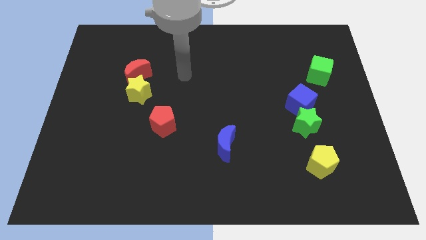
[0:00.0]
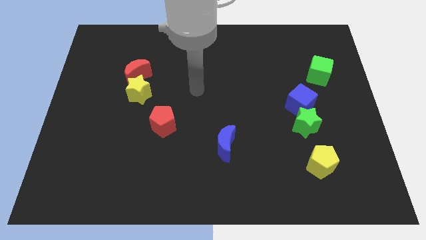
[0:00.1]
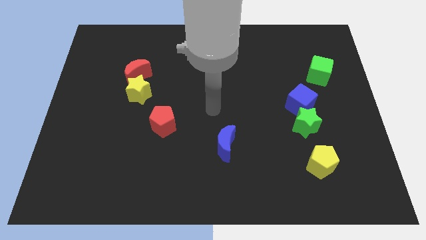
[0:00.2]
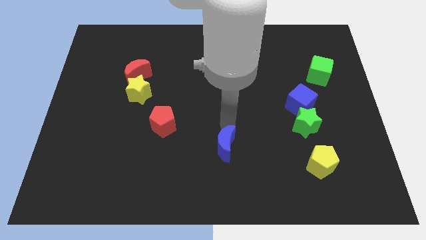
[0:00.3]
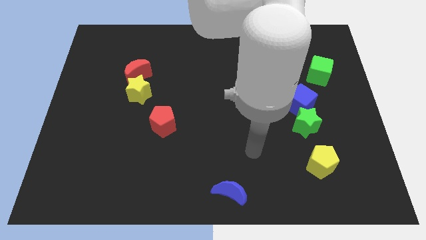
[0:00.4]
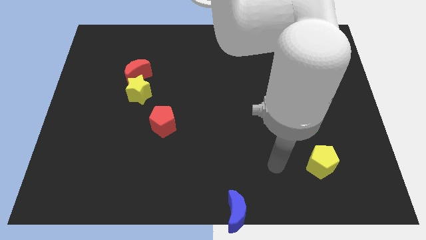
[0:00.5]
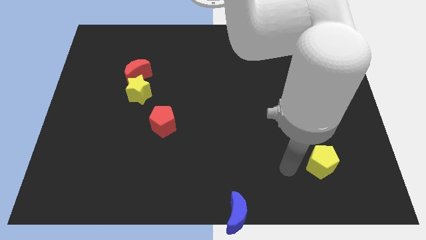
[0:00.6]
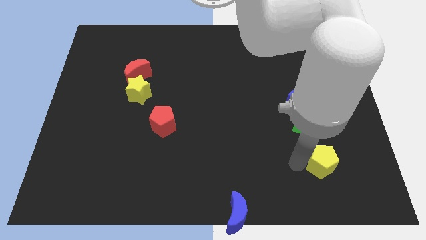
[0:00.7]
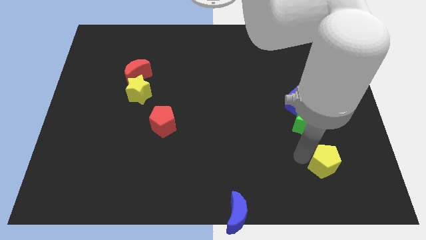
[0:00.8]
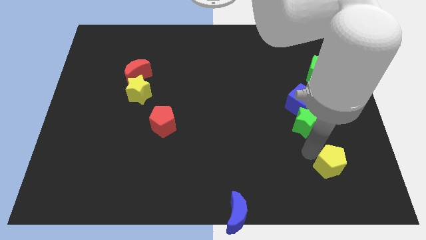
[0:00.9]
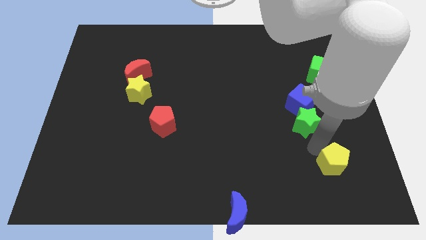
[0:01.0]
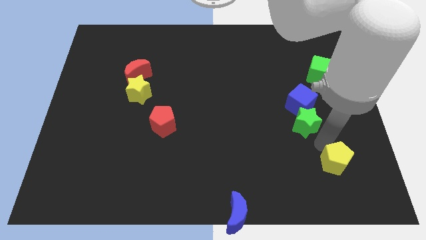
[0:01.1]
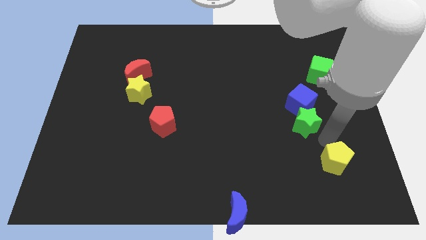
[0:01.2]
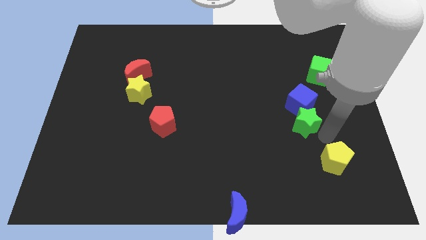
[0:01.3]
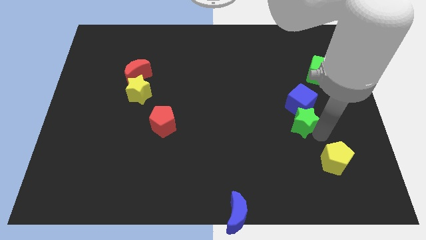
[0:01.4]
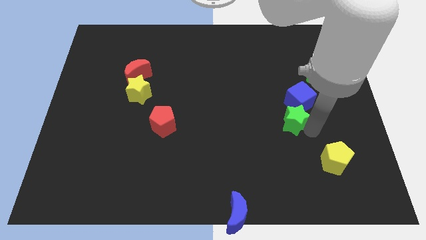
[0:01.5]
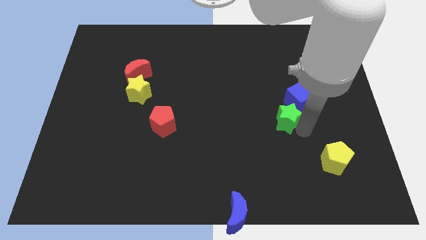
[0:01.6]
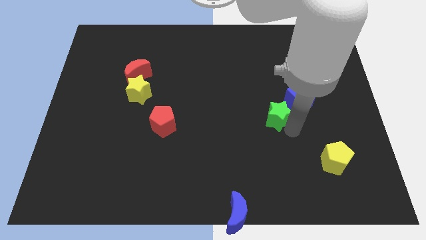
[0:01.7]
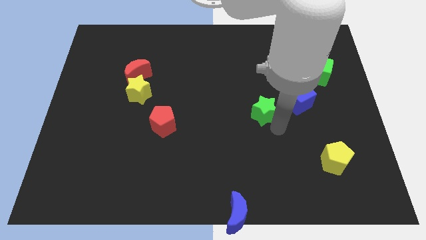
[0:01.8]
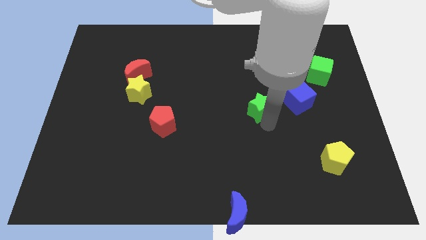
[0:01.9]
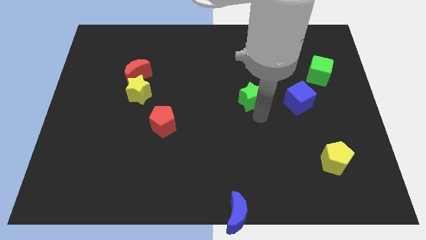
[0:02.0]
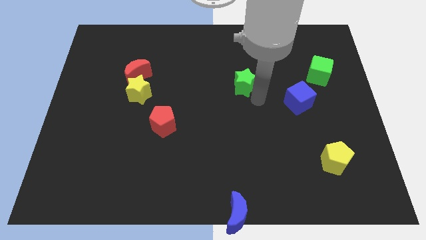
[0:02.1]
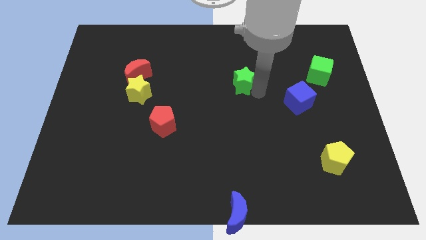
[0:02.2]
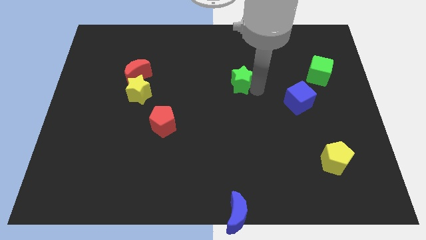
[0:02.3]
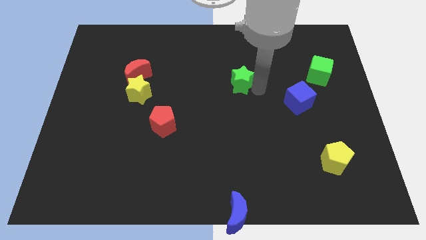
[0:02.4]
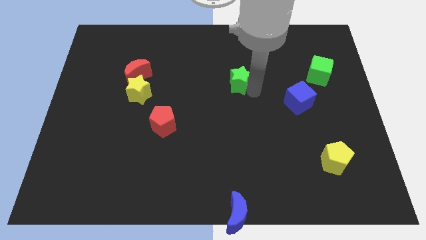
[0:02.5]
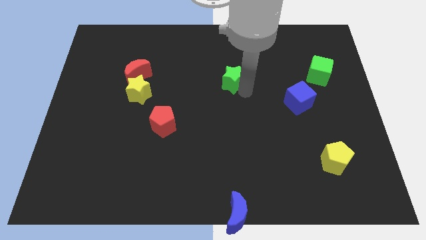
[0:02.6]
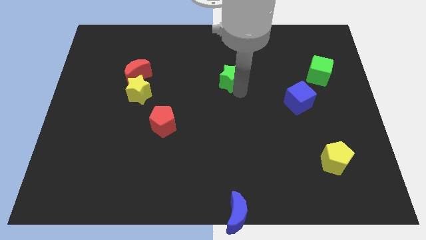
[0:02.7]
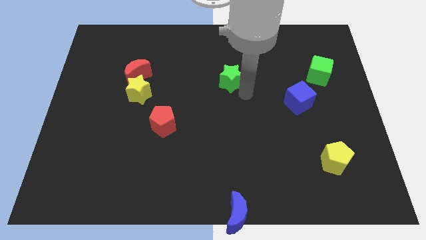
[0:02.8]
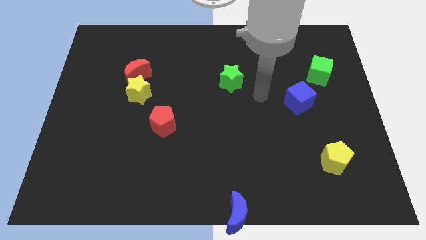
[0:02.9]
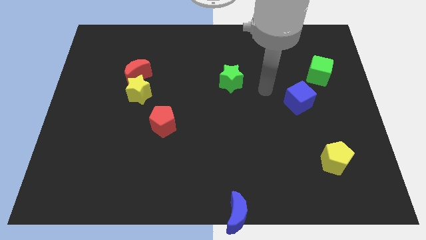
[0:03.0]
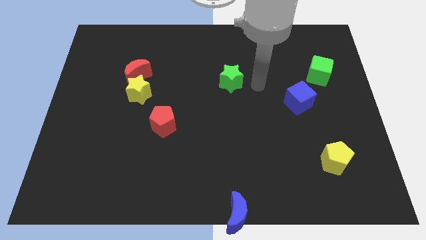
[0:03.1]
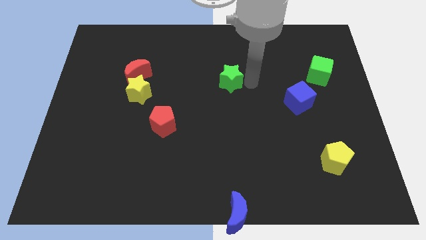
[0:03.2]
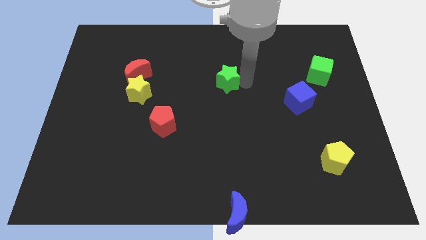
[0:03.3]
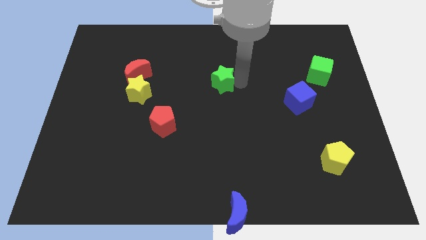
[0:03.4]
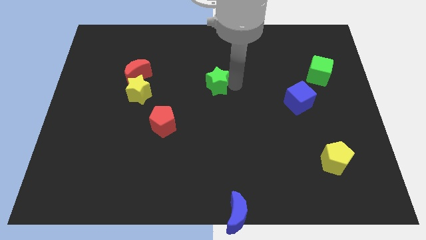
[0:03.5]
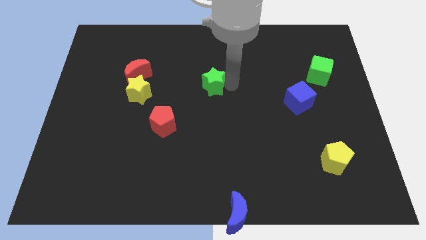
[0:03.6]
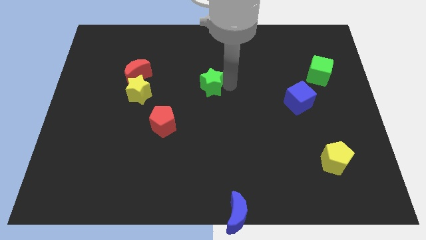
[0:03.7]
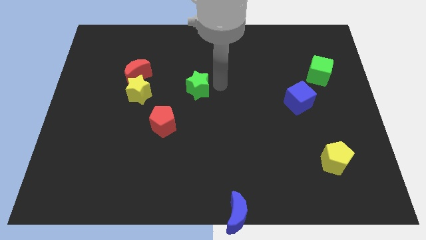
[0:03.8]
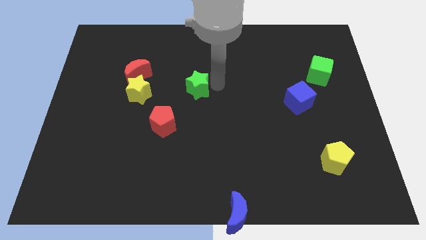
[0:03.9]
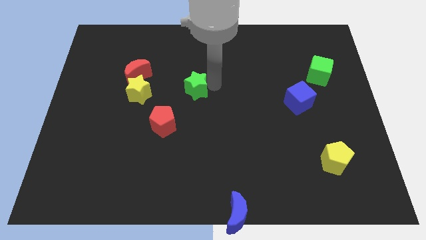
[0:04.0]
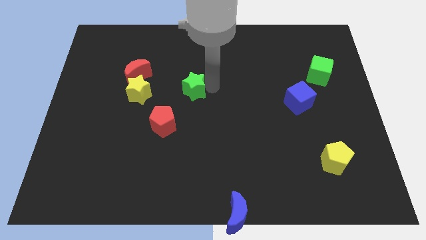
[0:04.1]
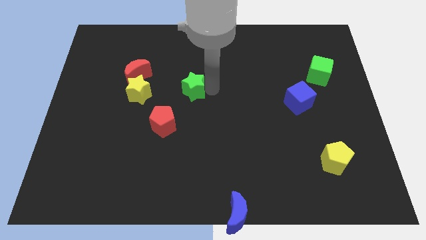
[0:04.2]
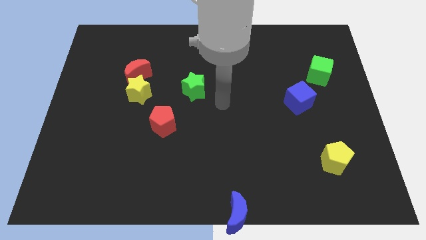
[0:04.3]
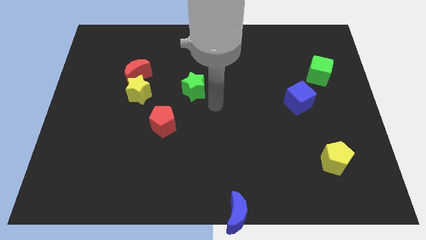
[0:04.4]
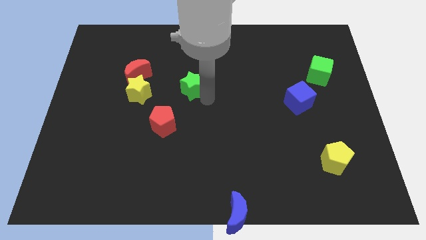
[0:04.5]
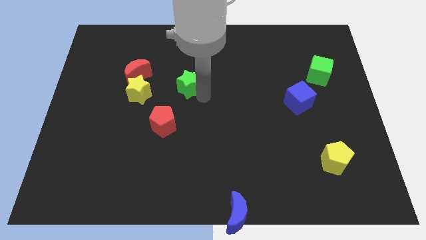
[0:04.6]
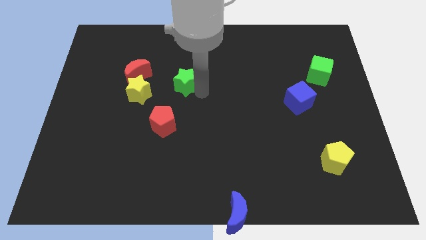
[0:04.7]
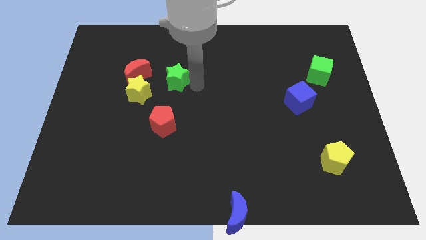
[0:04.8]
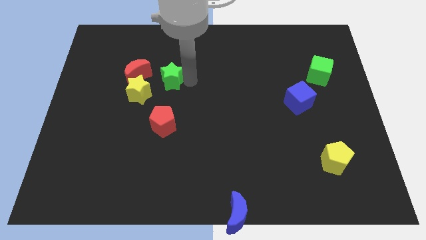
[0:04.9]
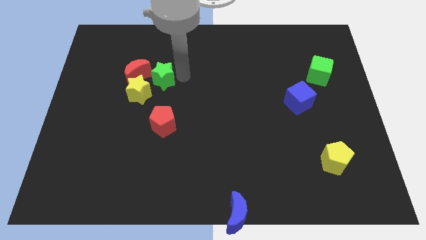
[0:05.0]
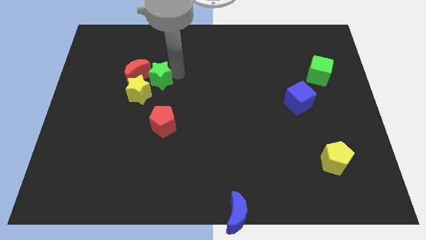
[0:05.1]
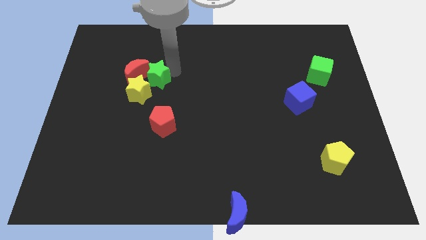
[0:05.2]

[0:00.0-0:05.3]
move the green star towards the red moon

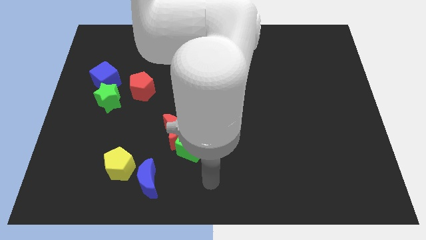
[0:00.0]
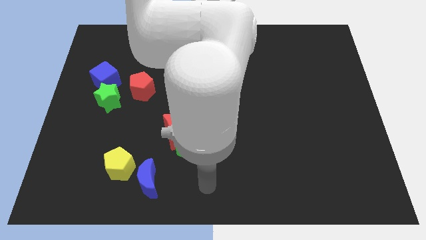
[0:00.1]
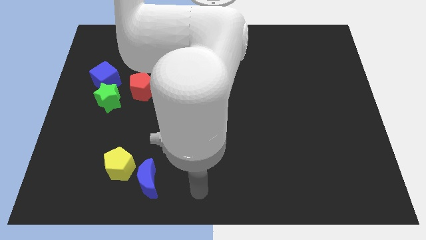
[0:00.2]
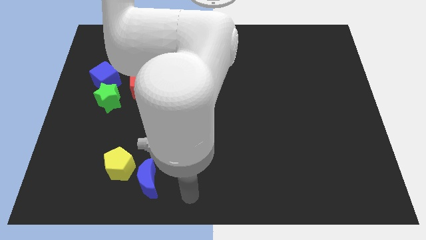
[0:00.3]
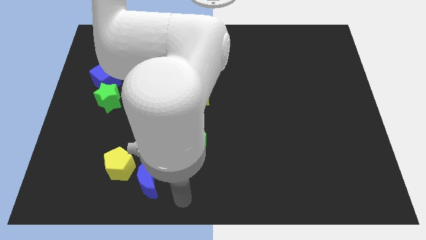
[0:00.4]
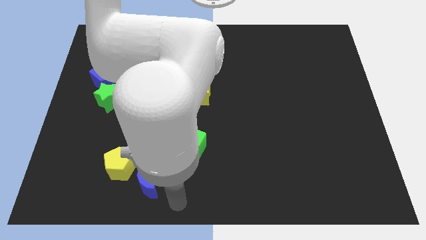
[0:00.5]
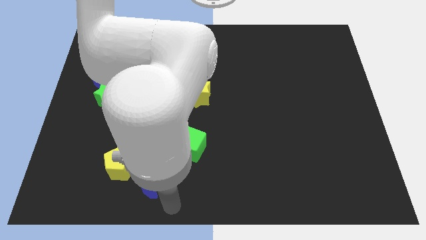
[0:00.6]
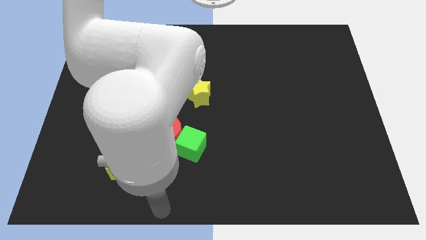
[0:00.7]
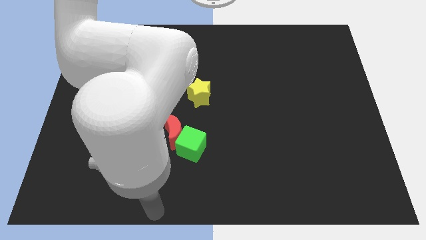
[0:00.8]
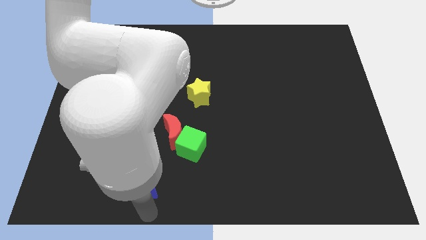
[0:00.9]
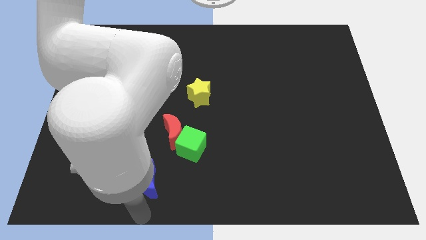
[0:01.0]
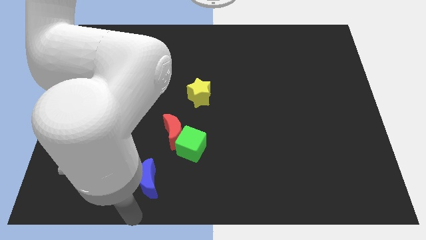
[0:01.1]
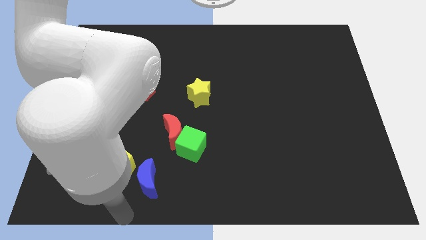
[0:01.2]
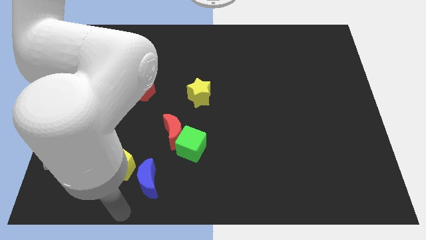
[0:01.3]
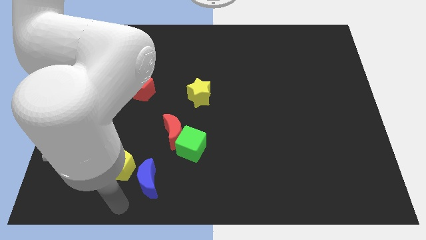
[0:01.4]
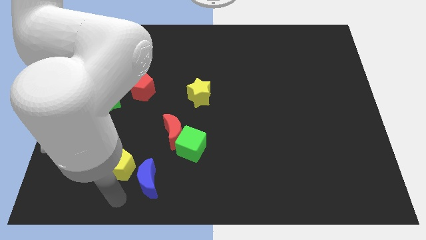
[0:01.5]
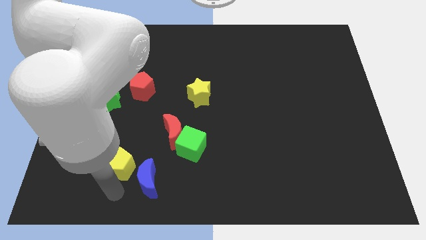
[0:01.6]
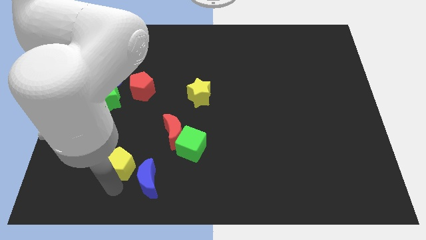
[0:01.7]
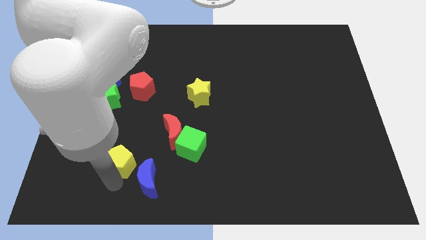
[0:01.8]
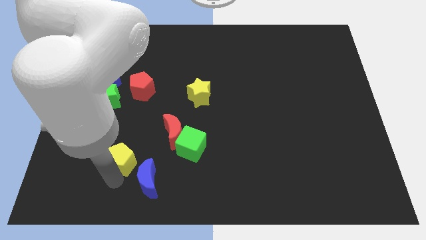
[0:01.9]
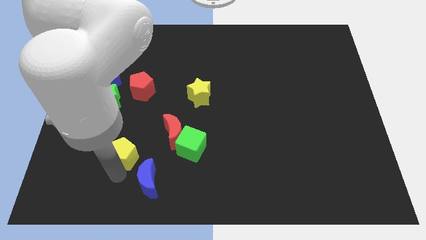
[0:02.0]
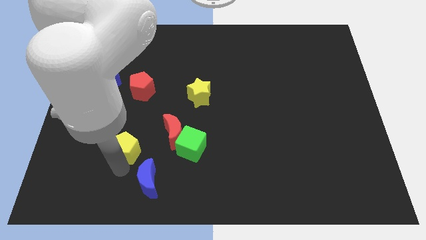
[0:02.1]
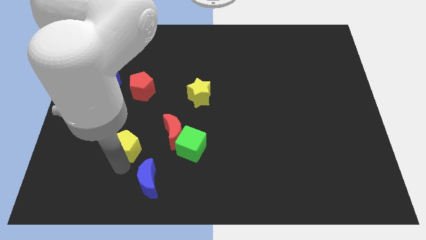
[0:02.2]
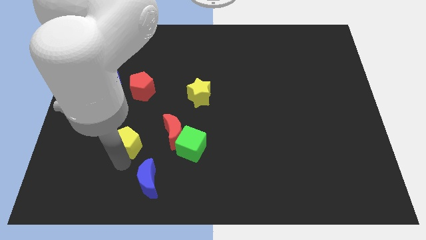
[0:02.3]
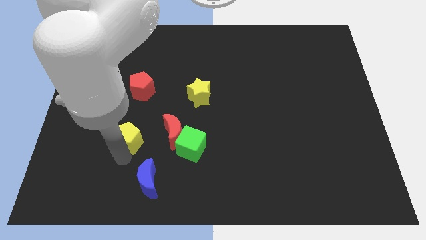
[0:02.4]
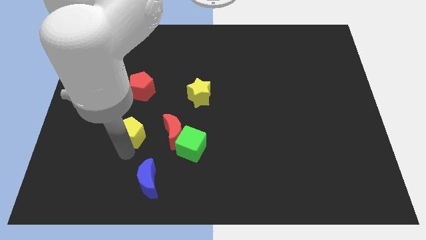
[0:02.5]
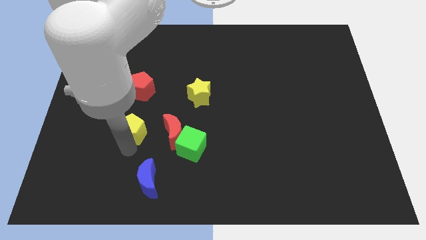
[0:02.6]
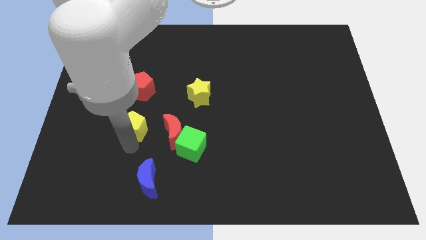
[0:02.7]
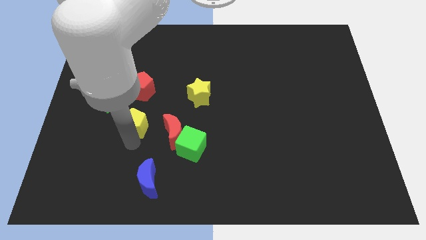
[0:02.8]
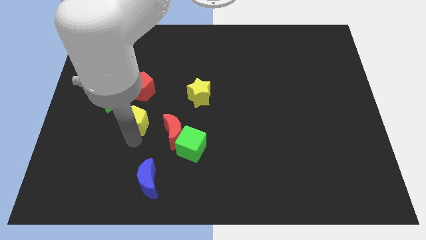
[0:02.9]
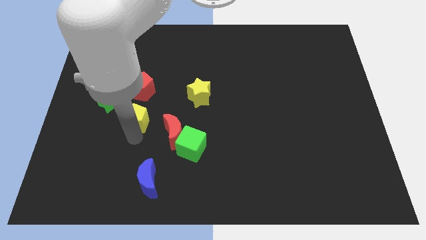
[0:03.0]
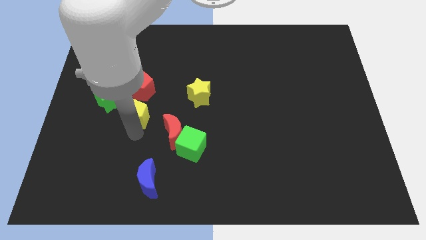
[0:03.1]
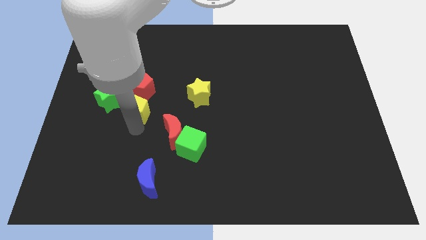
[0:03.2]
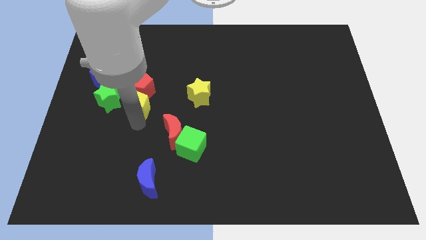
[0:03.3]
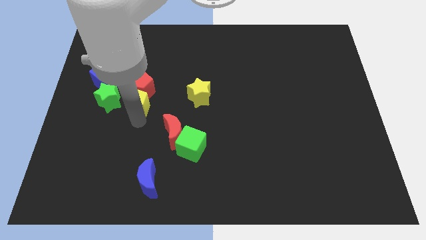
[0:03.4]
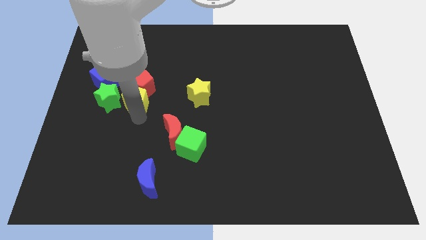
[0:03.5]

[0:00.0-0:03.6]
move the yellow pentagon towards the red pentagon
